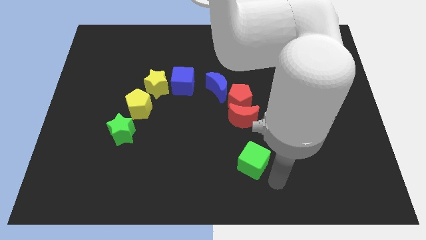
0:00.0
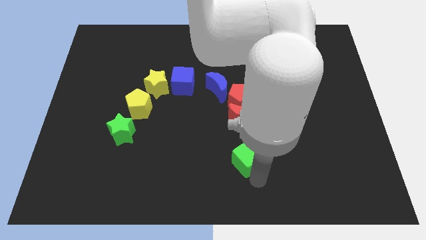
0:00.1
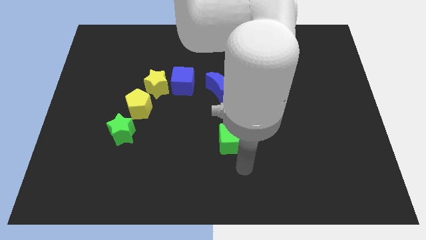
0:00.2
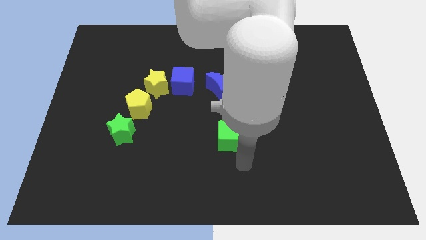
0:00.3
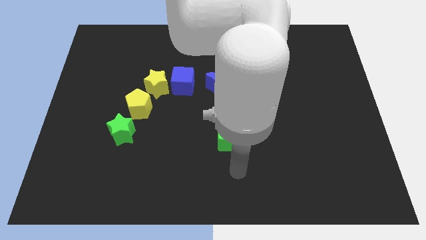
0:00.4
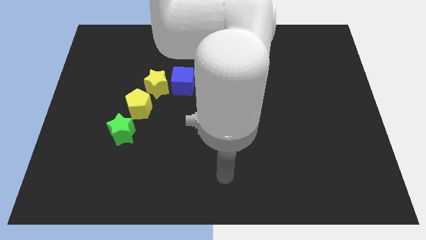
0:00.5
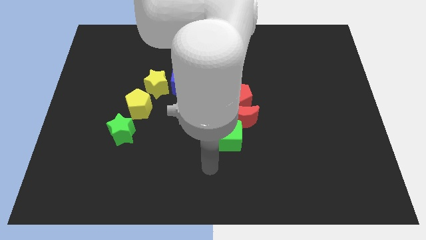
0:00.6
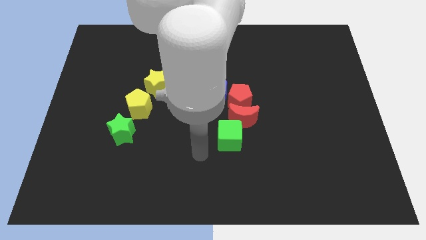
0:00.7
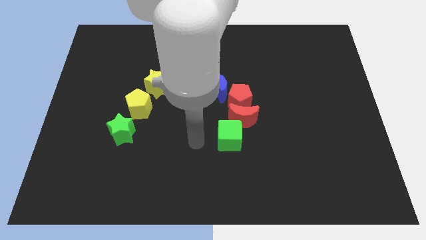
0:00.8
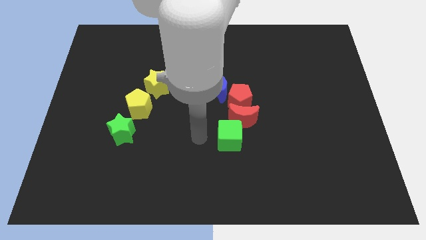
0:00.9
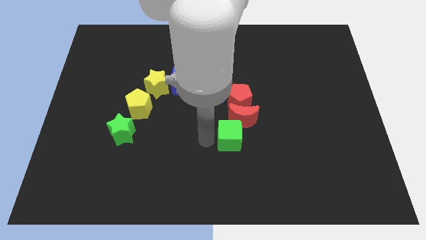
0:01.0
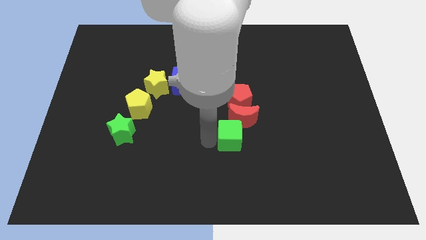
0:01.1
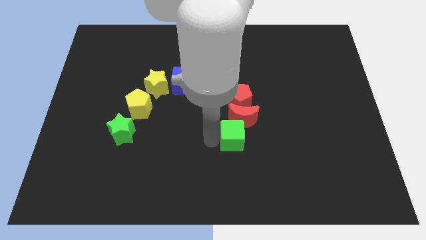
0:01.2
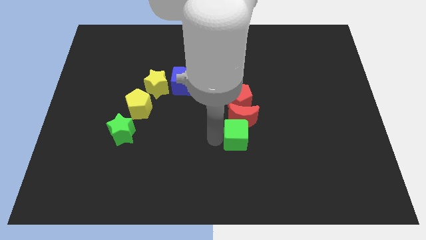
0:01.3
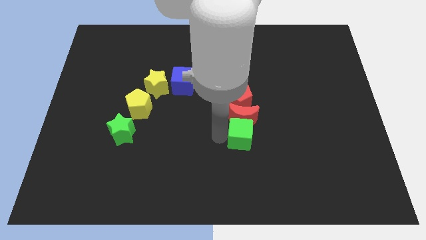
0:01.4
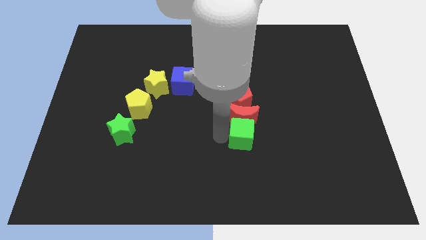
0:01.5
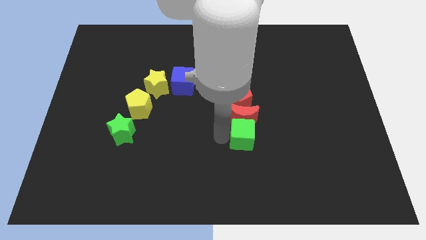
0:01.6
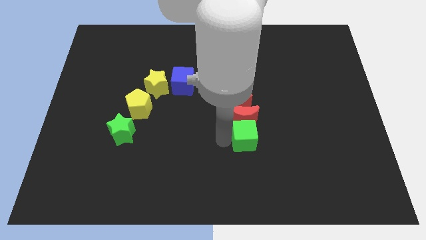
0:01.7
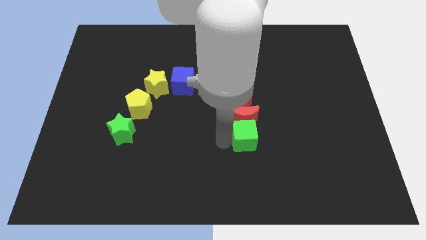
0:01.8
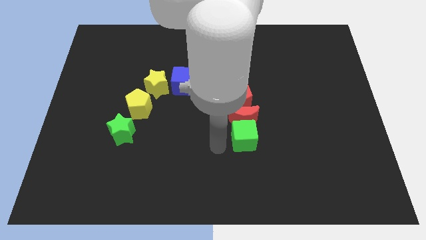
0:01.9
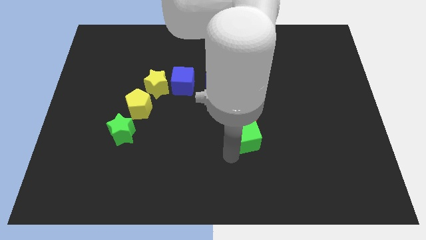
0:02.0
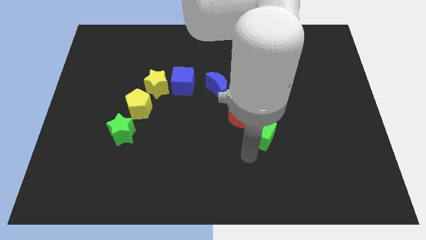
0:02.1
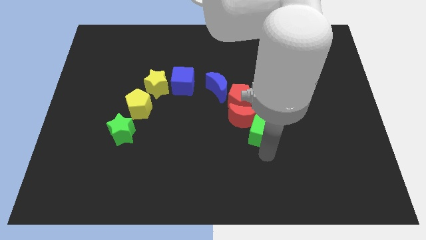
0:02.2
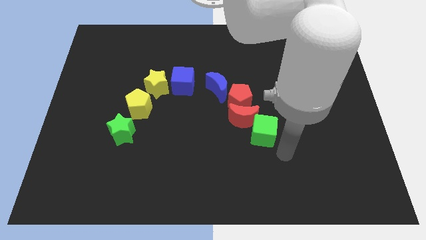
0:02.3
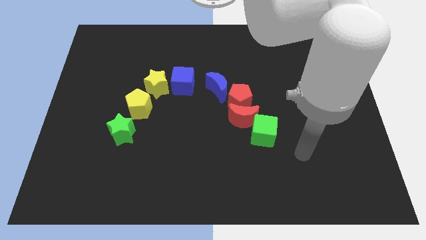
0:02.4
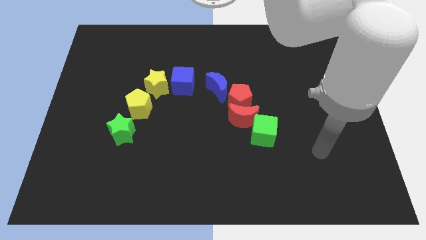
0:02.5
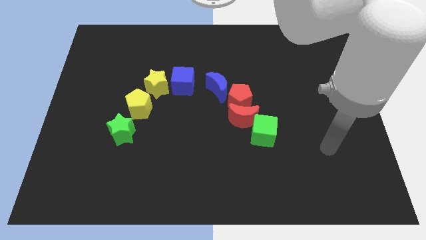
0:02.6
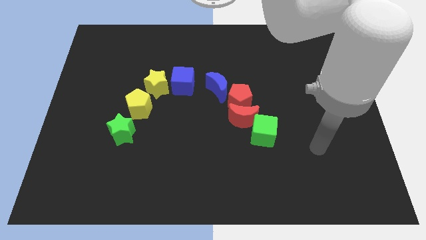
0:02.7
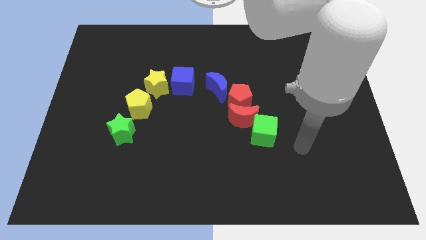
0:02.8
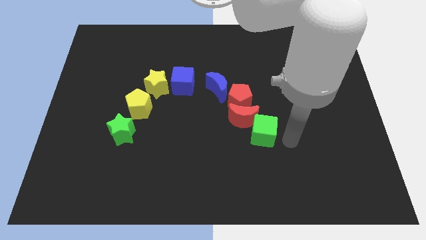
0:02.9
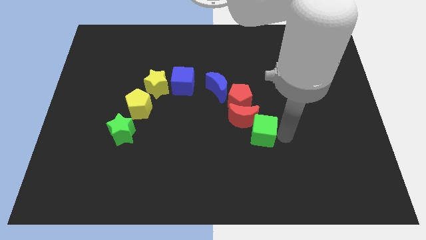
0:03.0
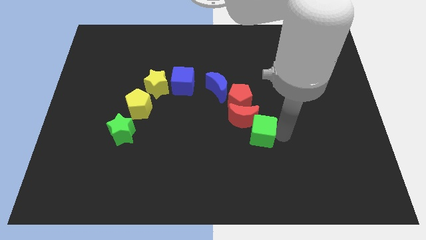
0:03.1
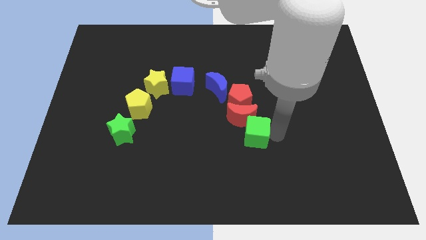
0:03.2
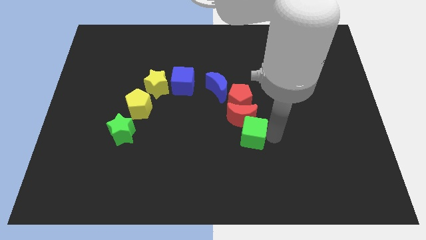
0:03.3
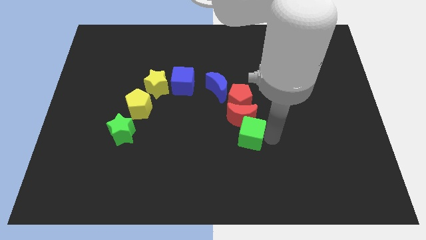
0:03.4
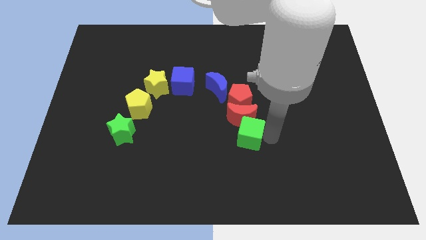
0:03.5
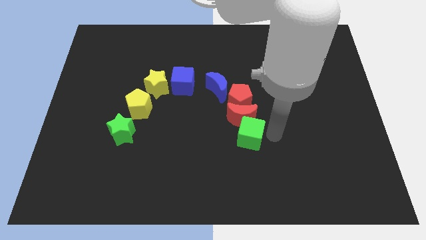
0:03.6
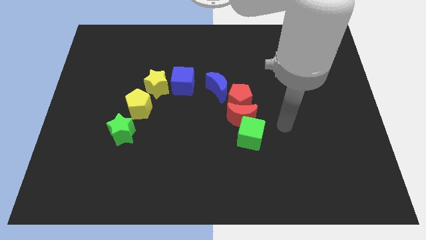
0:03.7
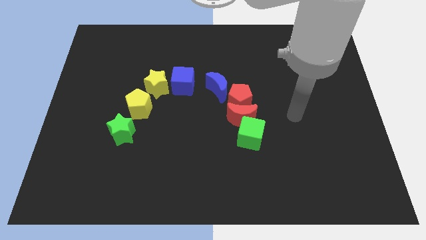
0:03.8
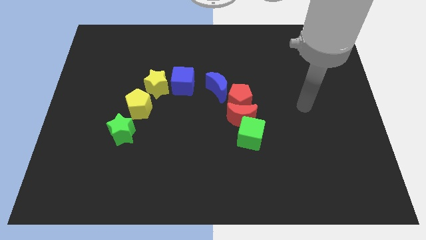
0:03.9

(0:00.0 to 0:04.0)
move the green cube towards the group of blocks

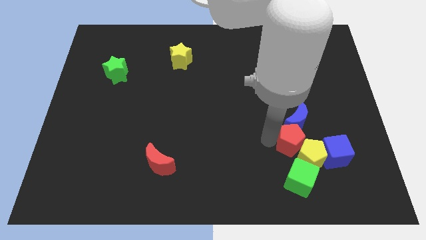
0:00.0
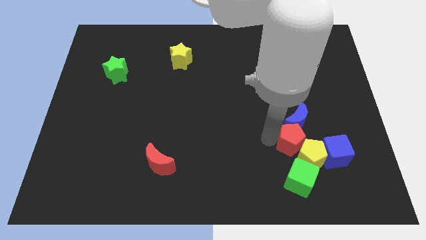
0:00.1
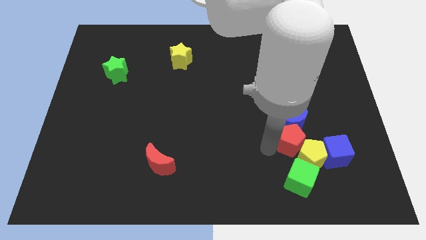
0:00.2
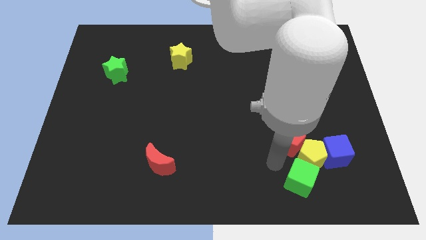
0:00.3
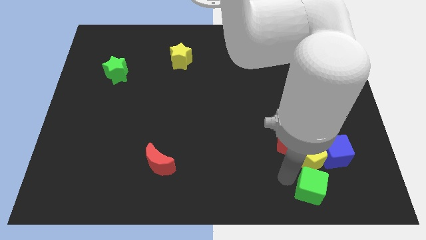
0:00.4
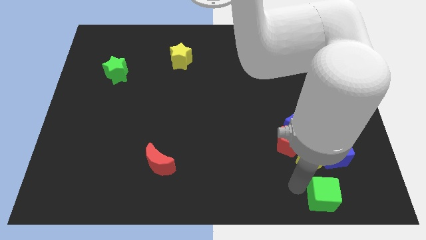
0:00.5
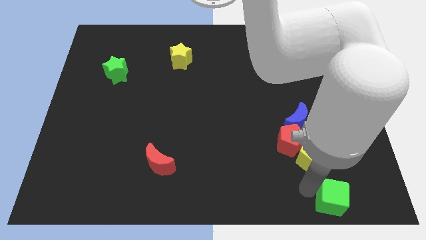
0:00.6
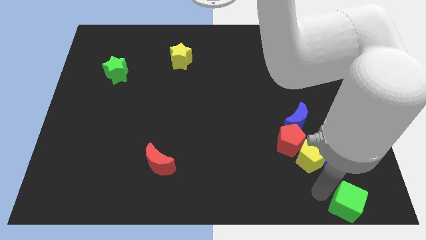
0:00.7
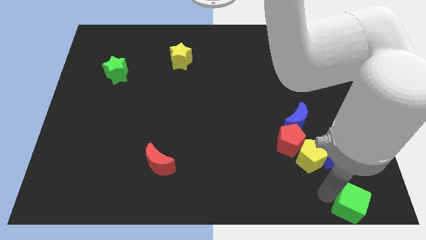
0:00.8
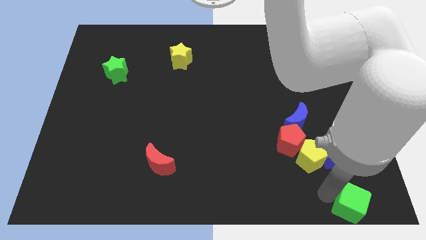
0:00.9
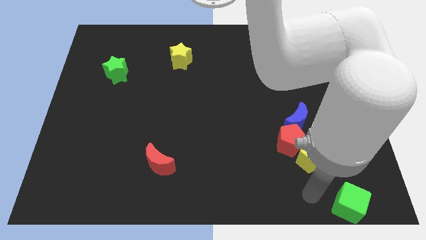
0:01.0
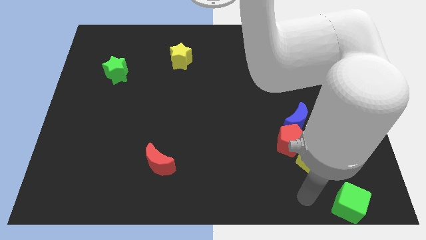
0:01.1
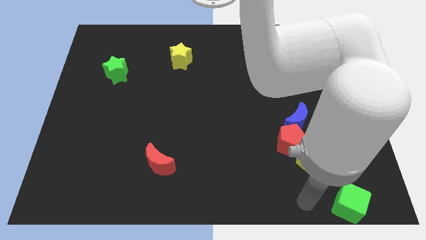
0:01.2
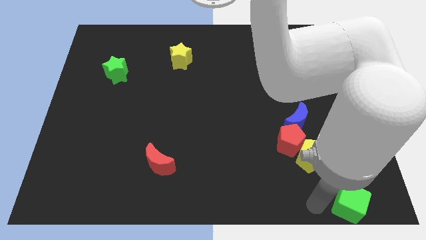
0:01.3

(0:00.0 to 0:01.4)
push green cube to the bottom right corner of the board

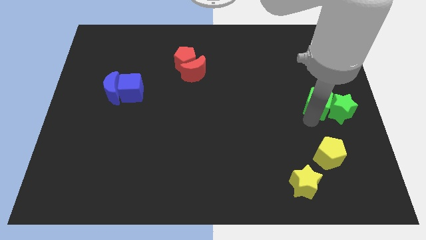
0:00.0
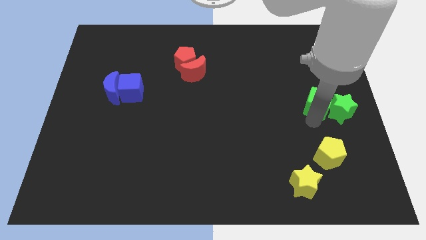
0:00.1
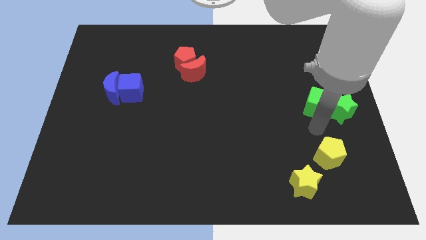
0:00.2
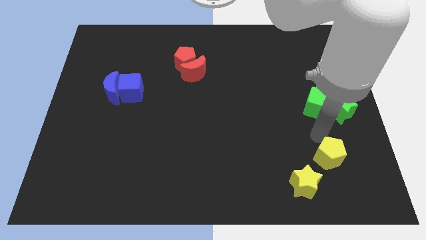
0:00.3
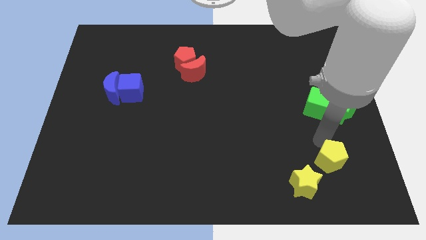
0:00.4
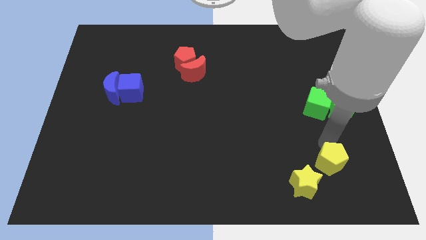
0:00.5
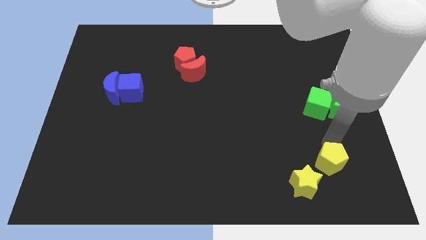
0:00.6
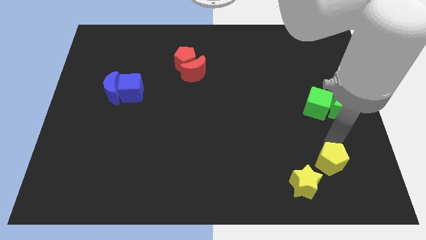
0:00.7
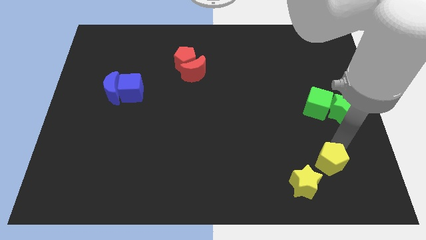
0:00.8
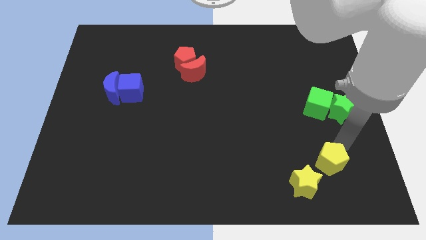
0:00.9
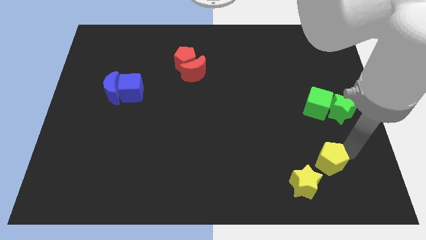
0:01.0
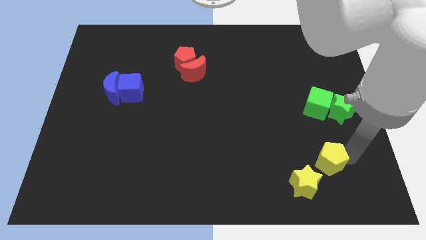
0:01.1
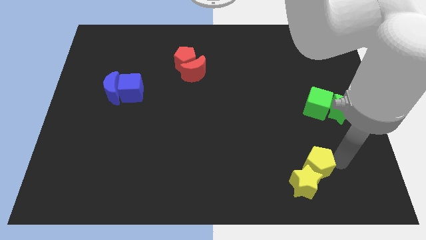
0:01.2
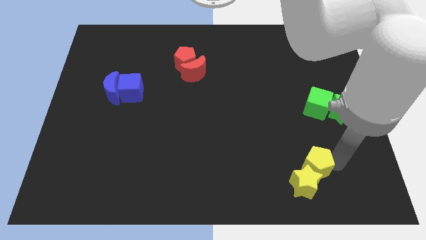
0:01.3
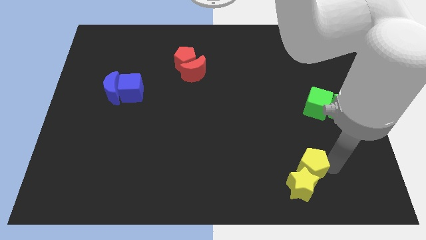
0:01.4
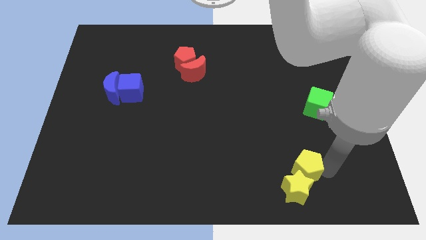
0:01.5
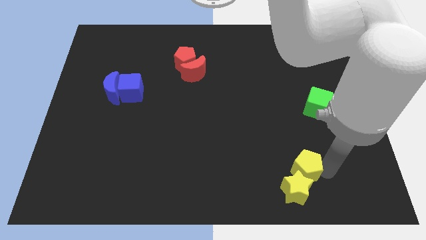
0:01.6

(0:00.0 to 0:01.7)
move the yellow pentagon into the yellow star

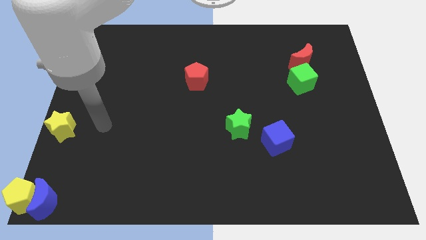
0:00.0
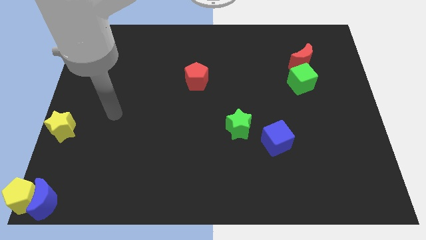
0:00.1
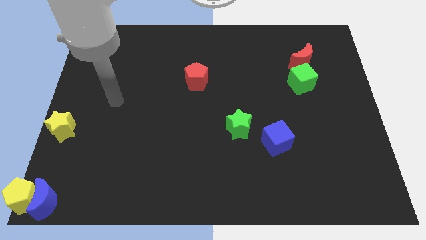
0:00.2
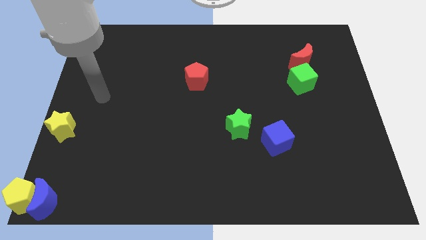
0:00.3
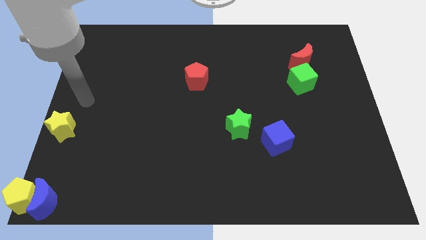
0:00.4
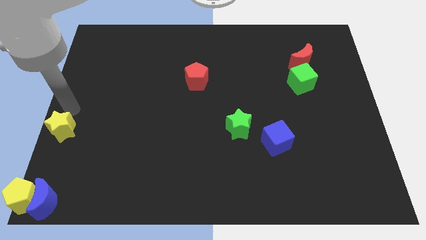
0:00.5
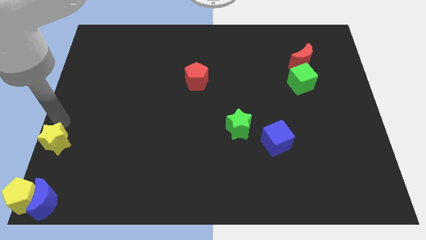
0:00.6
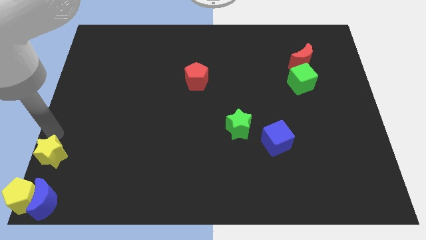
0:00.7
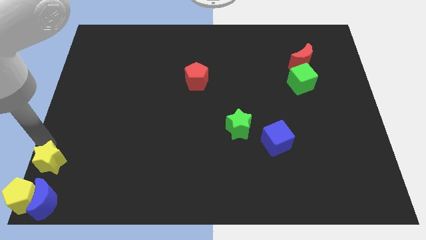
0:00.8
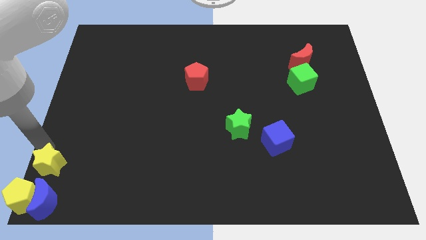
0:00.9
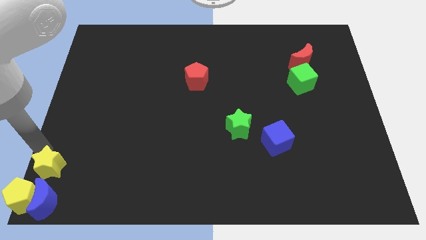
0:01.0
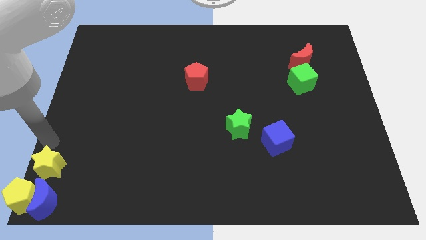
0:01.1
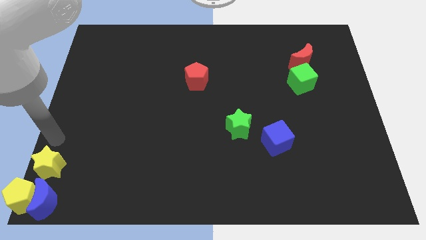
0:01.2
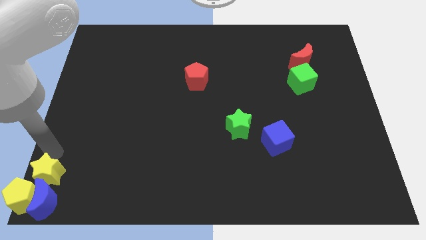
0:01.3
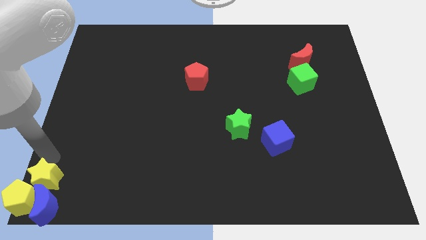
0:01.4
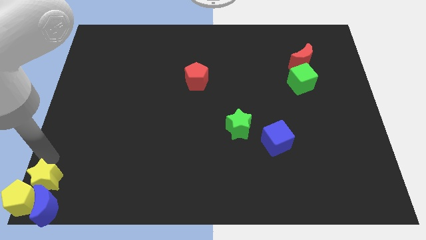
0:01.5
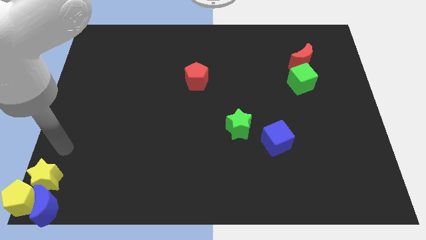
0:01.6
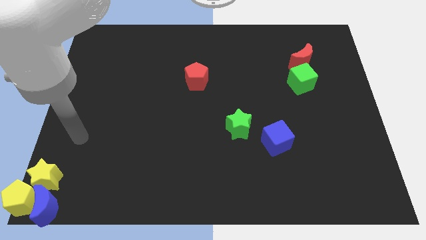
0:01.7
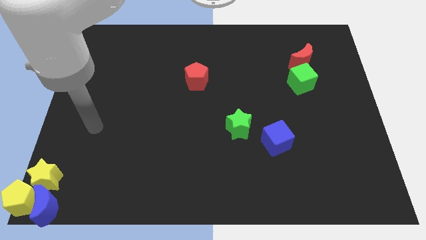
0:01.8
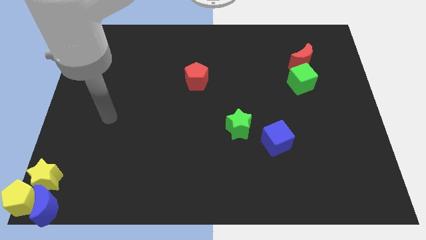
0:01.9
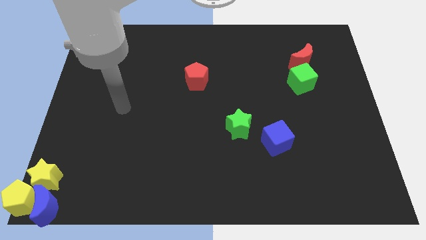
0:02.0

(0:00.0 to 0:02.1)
push yellow star in to the the blue crescent
